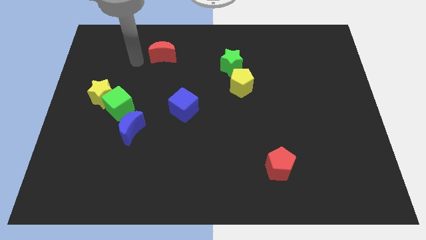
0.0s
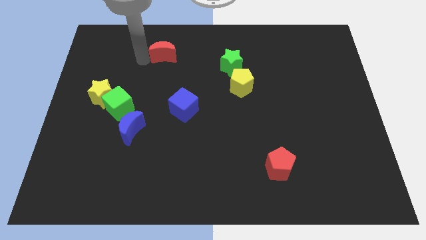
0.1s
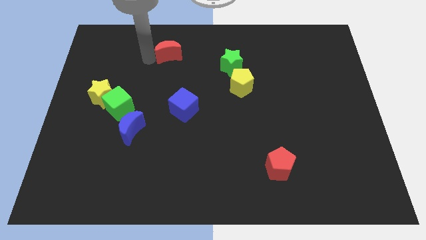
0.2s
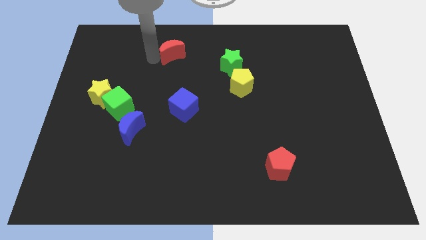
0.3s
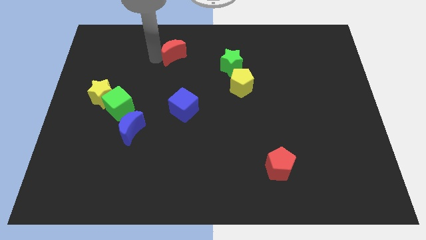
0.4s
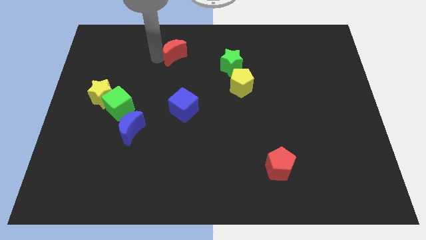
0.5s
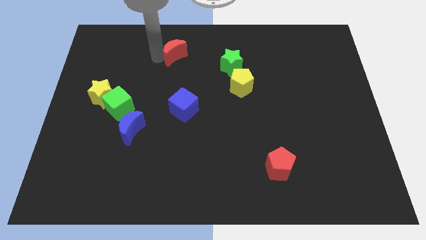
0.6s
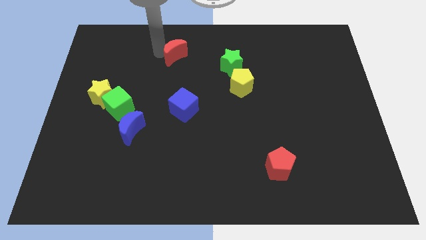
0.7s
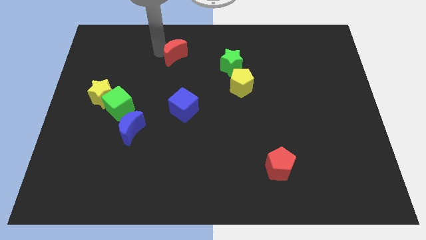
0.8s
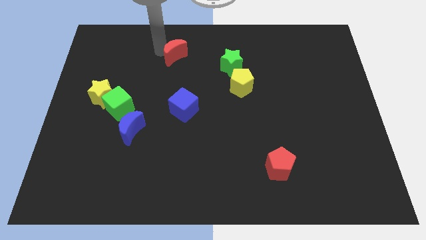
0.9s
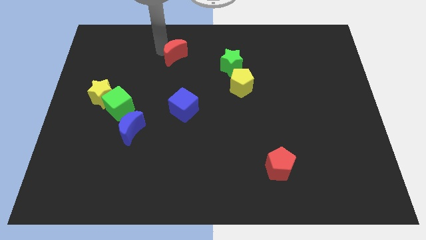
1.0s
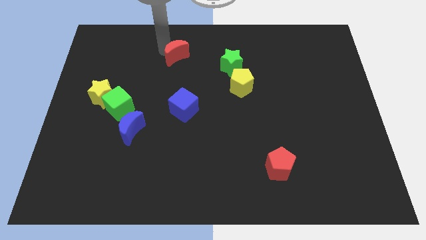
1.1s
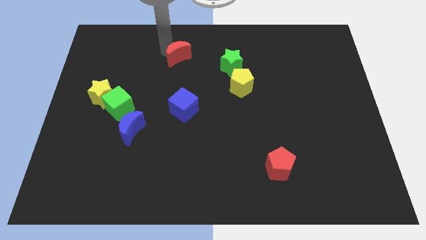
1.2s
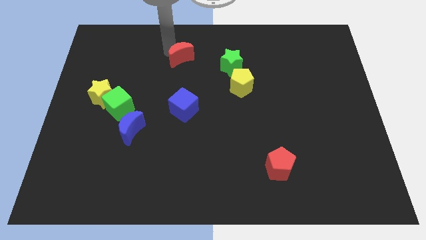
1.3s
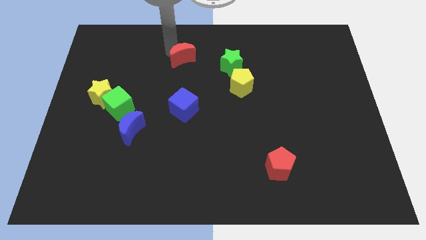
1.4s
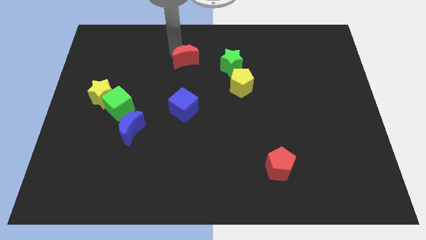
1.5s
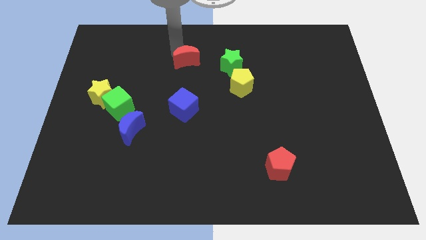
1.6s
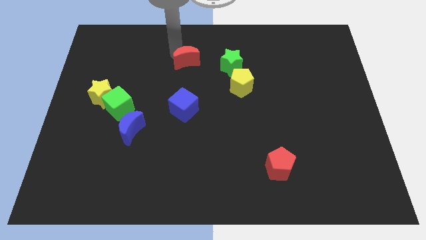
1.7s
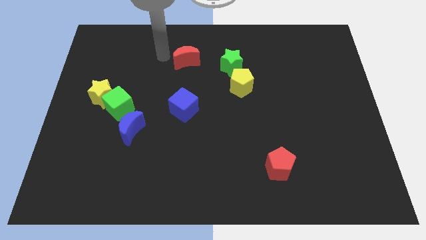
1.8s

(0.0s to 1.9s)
move the red crescent to left of the green star

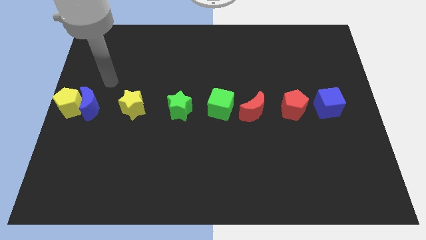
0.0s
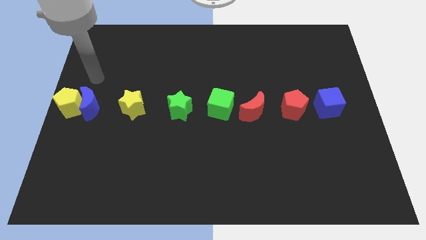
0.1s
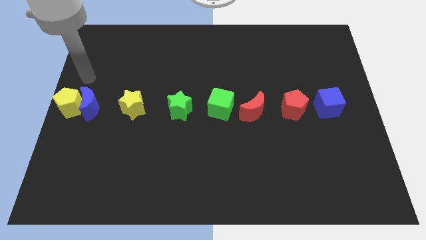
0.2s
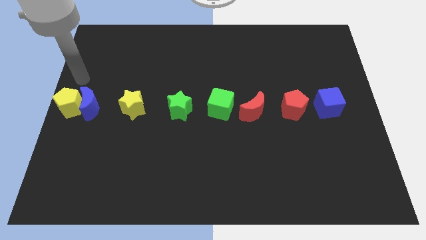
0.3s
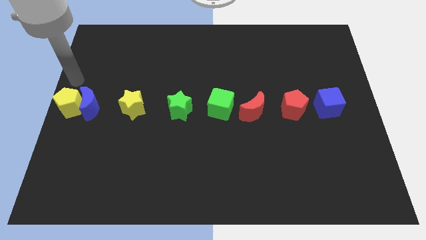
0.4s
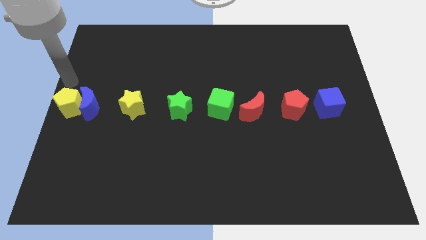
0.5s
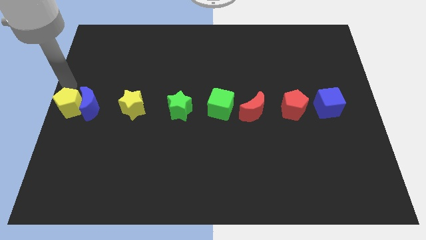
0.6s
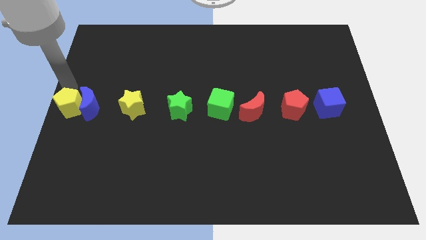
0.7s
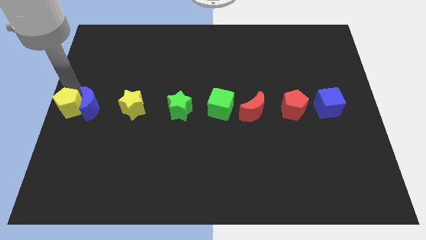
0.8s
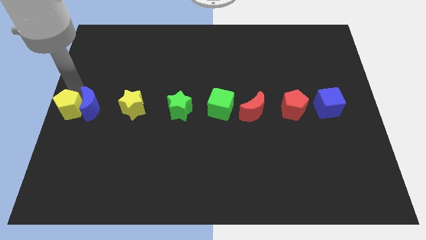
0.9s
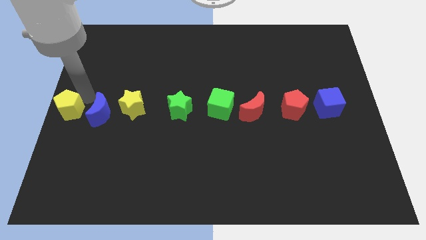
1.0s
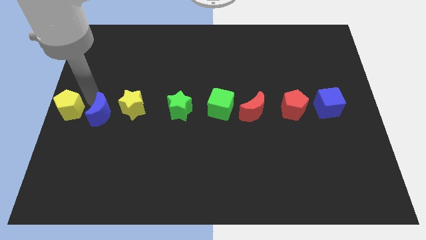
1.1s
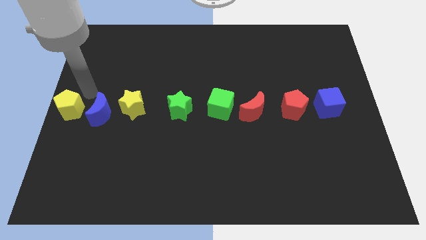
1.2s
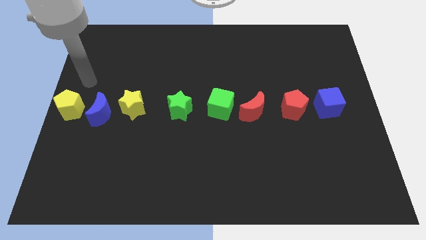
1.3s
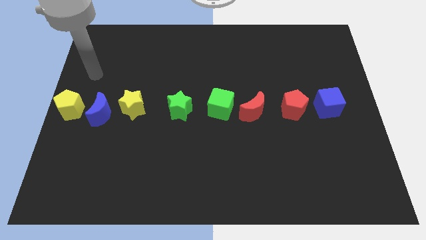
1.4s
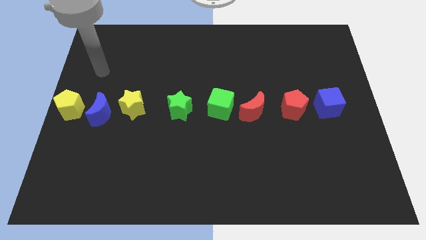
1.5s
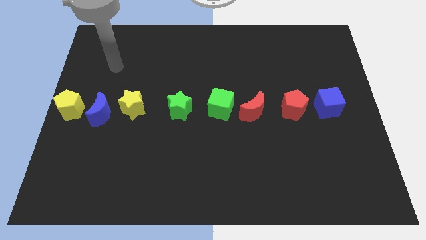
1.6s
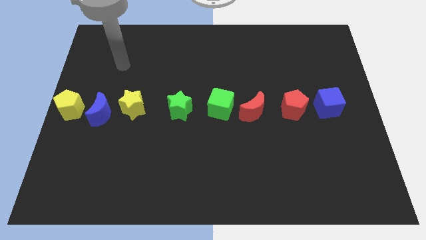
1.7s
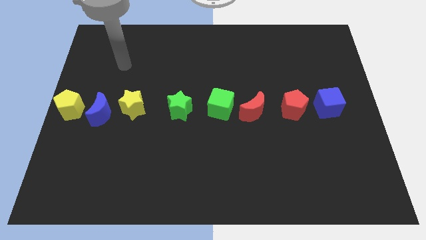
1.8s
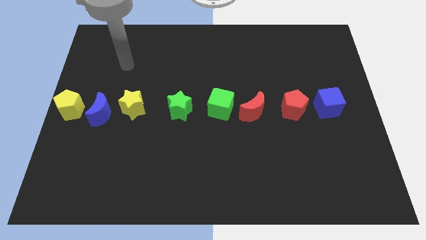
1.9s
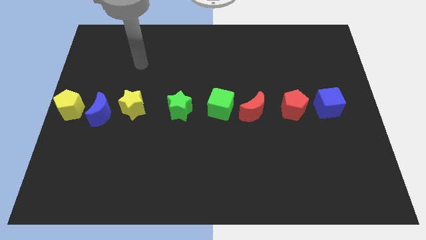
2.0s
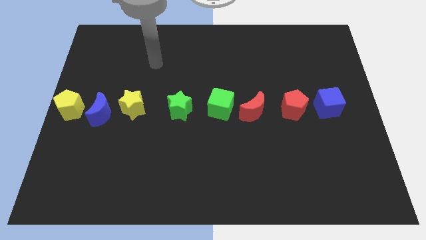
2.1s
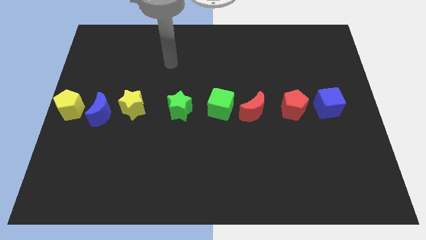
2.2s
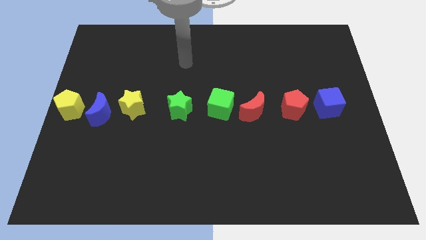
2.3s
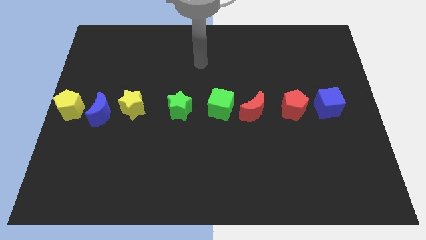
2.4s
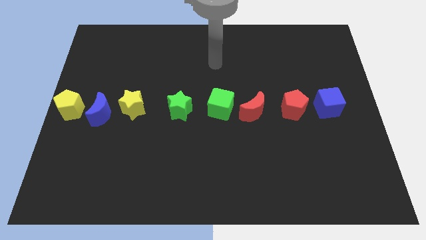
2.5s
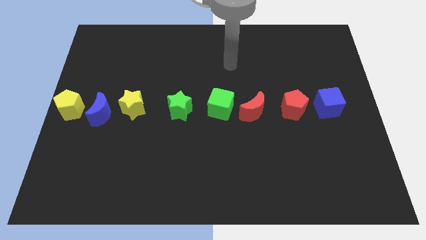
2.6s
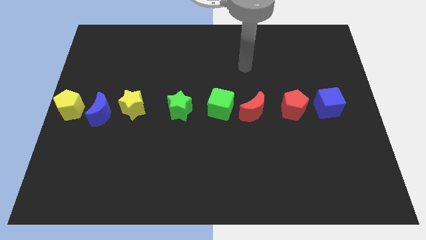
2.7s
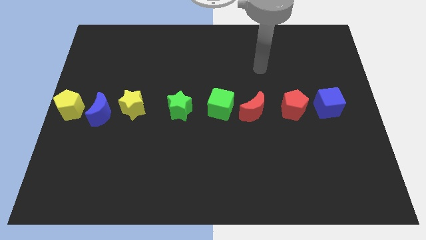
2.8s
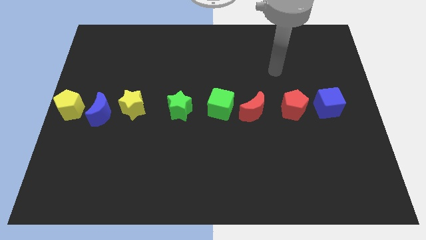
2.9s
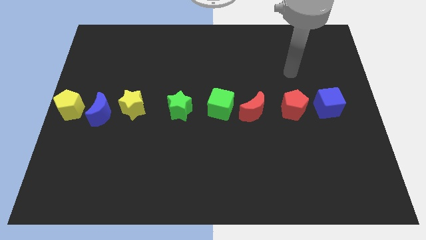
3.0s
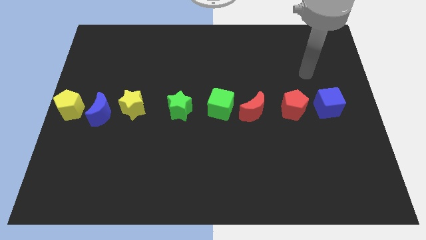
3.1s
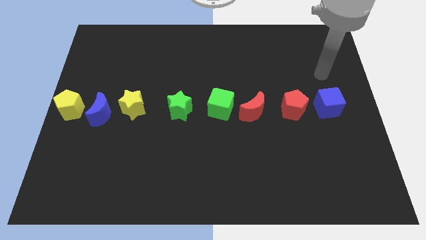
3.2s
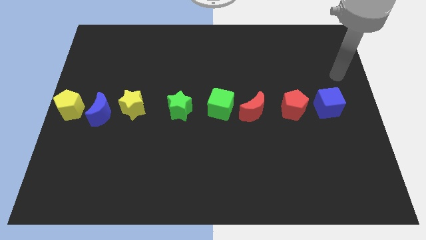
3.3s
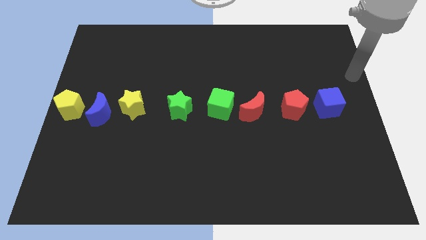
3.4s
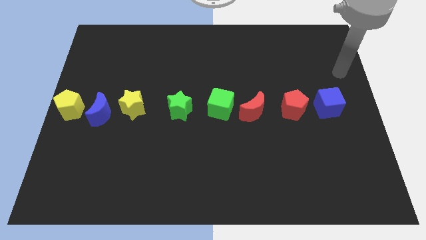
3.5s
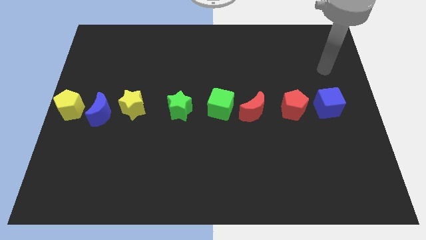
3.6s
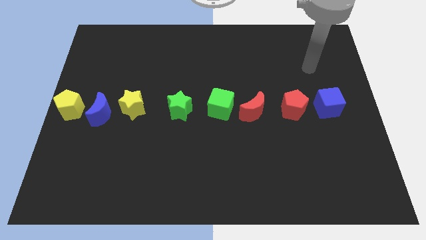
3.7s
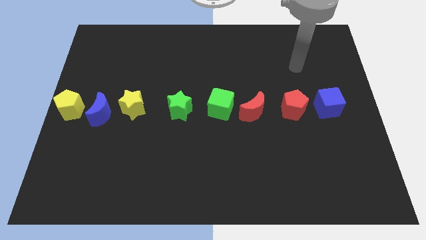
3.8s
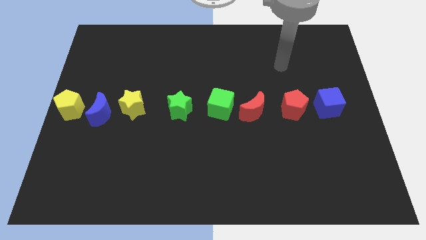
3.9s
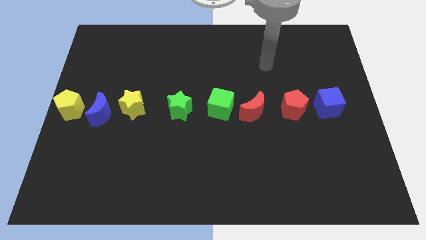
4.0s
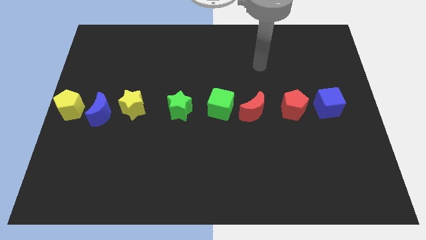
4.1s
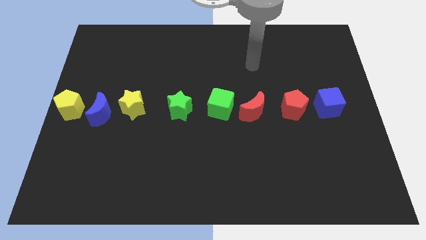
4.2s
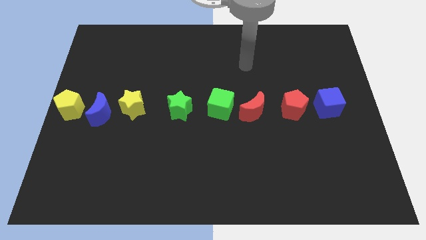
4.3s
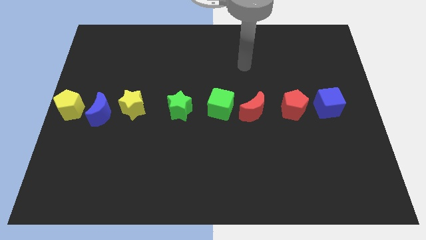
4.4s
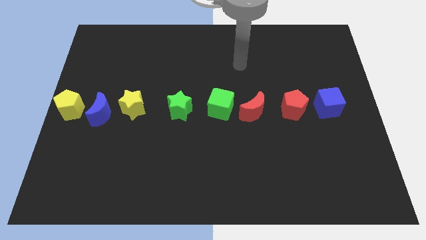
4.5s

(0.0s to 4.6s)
go away from the yellow pentagon

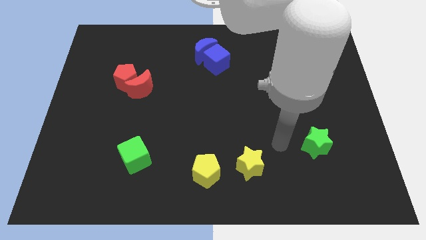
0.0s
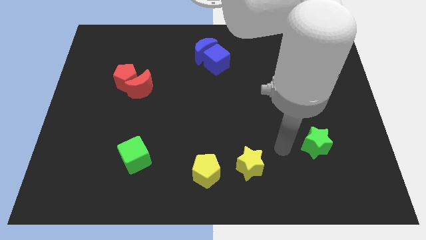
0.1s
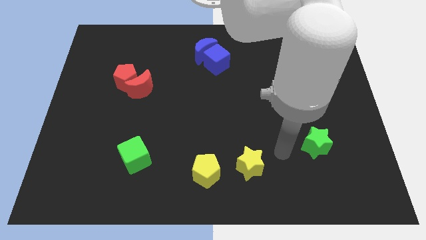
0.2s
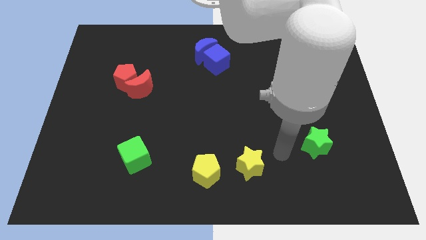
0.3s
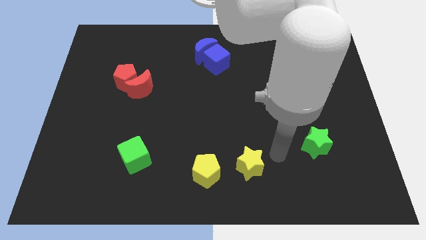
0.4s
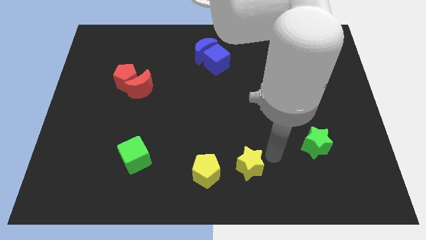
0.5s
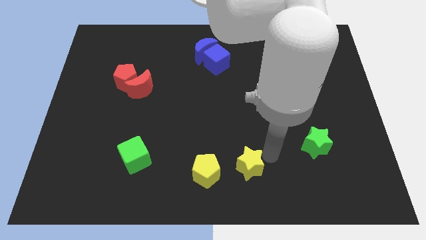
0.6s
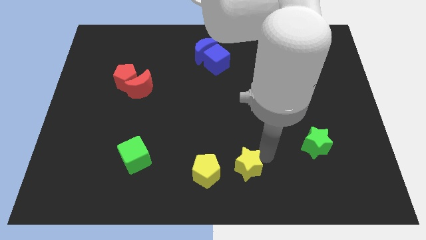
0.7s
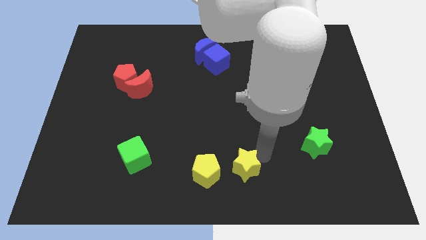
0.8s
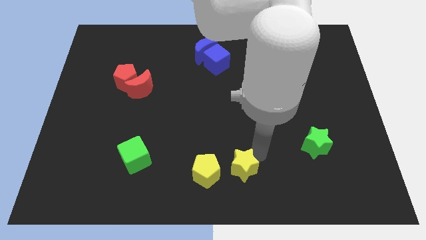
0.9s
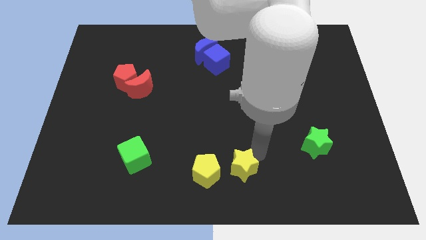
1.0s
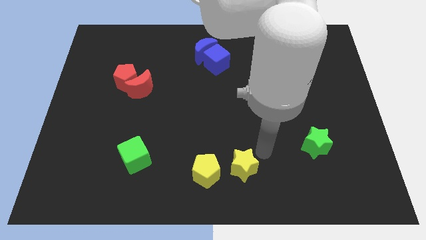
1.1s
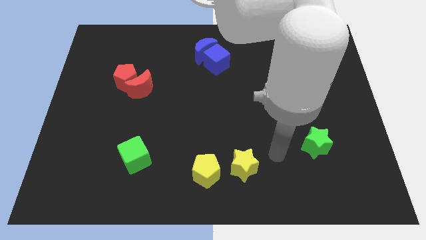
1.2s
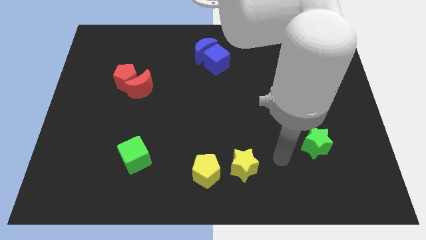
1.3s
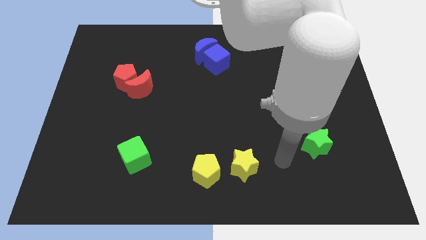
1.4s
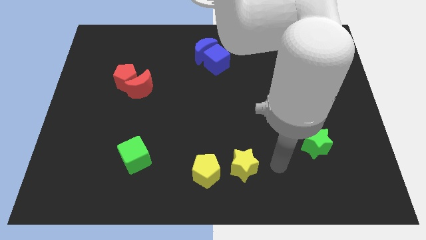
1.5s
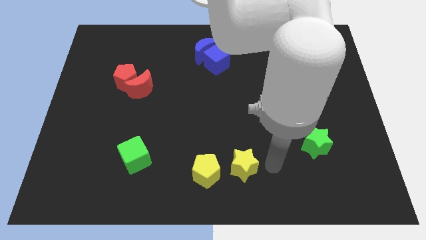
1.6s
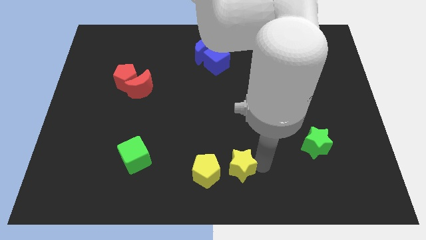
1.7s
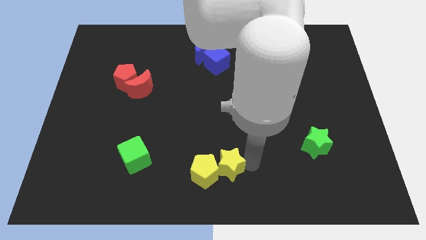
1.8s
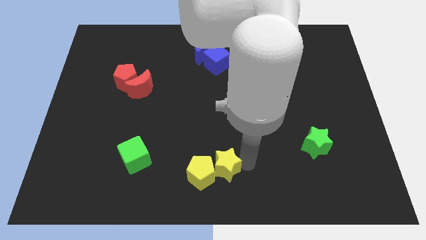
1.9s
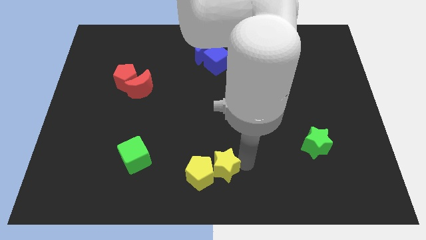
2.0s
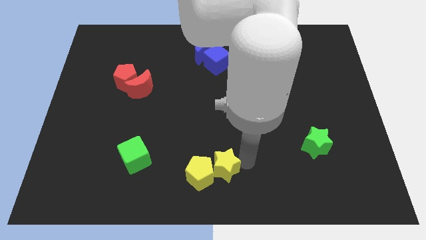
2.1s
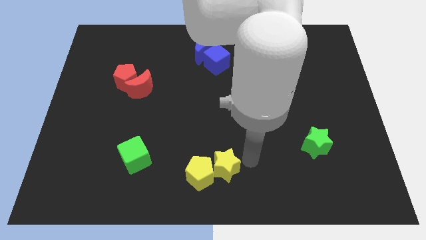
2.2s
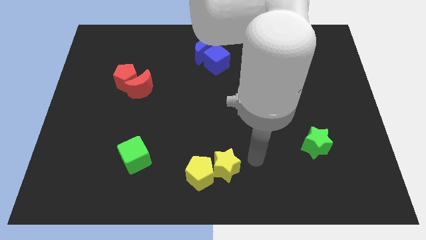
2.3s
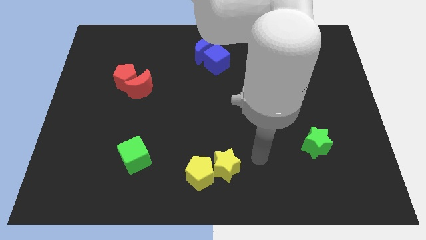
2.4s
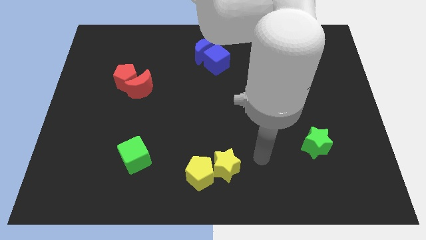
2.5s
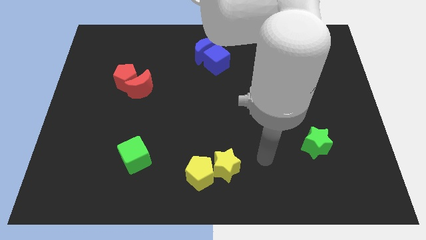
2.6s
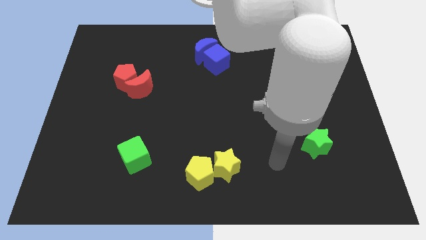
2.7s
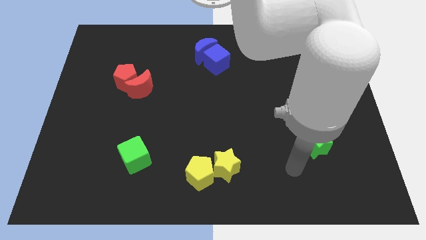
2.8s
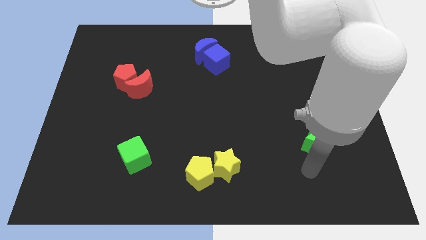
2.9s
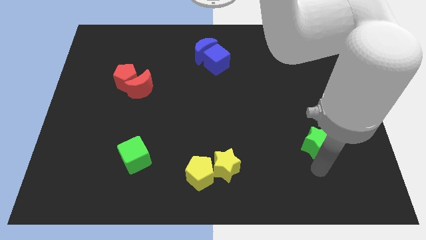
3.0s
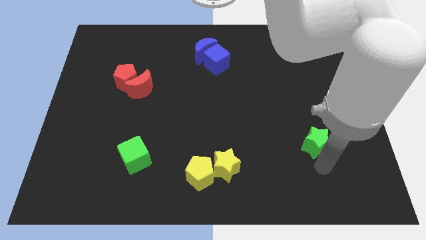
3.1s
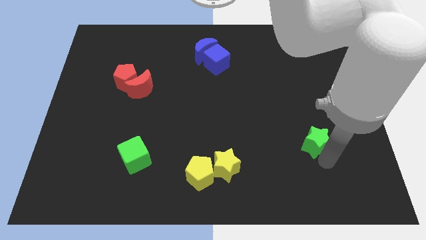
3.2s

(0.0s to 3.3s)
push the yellow star into the yellow pentagon
